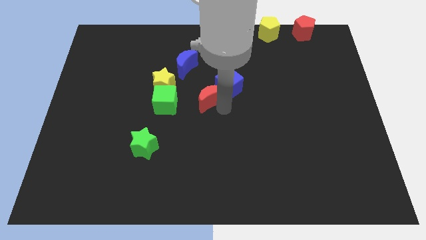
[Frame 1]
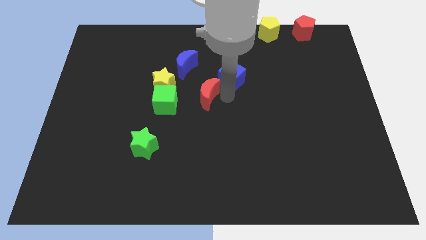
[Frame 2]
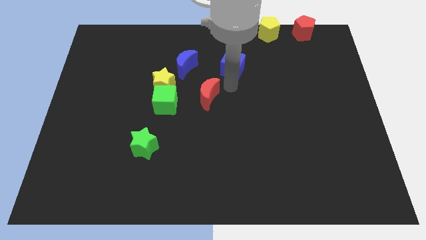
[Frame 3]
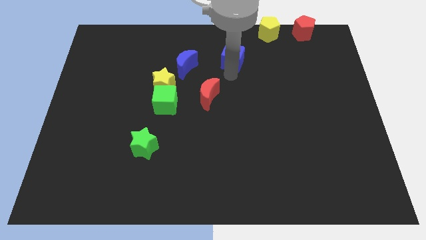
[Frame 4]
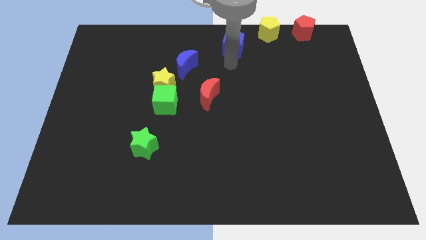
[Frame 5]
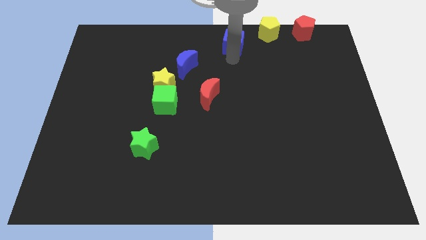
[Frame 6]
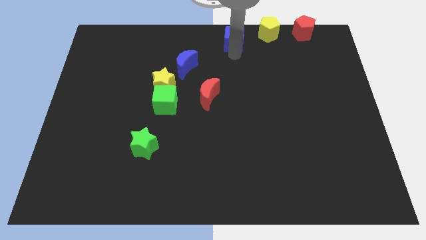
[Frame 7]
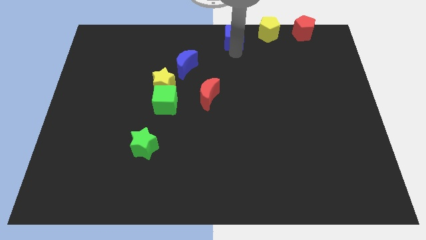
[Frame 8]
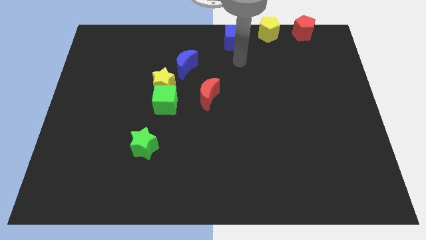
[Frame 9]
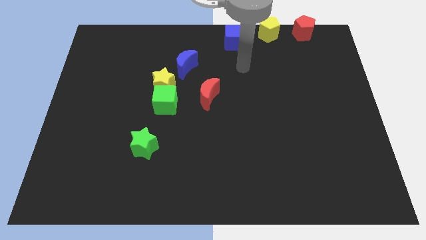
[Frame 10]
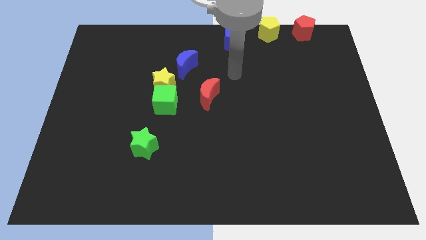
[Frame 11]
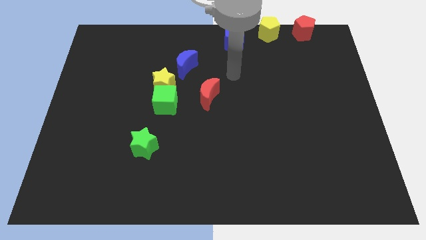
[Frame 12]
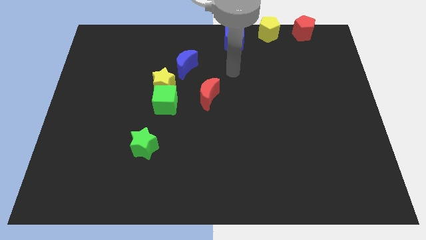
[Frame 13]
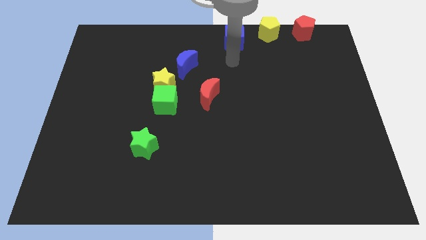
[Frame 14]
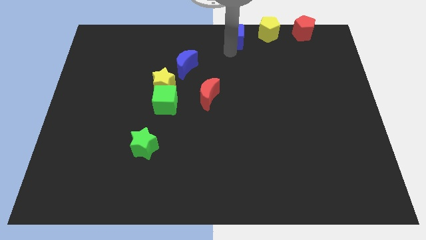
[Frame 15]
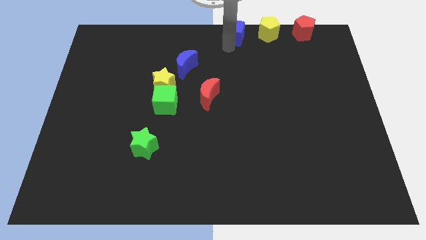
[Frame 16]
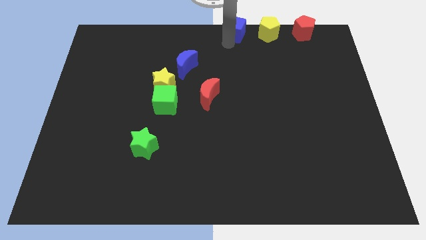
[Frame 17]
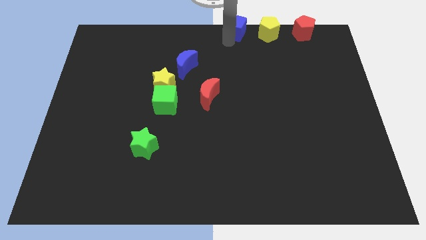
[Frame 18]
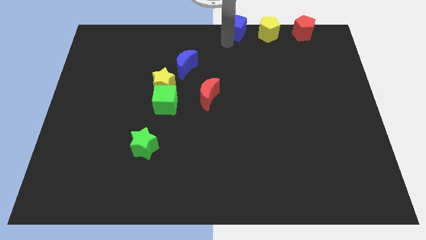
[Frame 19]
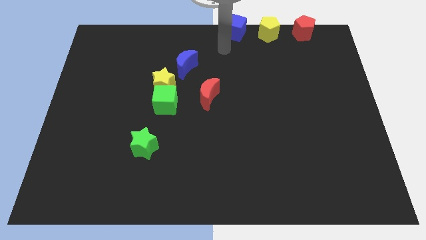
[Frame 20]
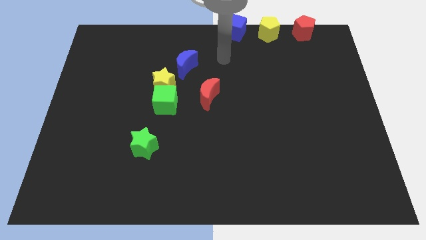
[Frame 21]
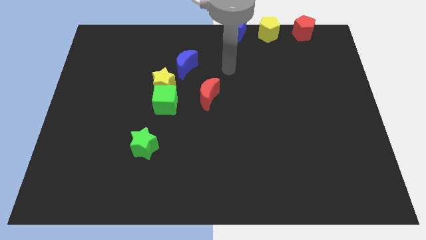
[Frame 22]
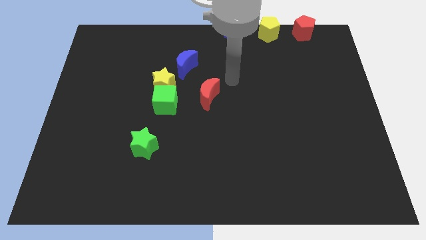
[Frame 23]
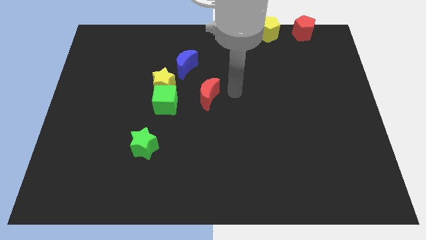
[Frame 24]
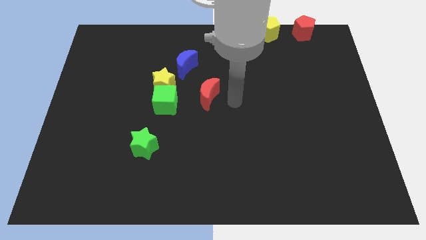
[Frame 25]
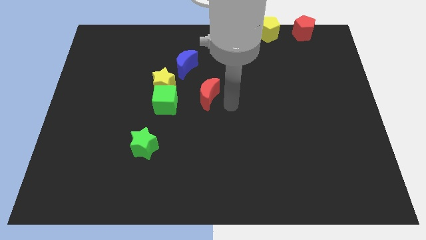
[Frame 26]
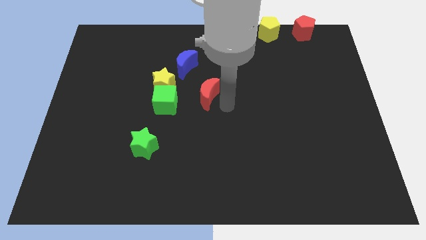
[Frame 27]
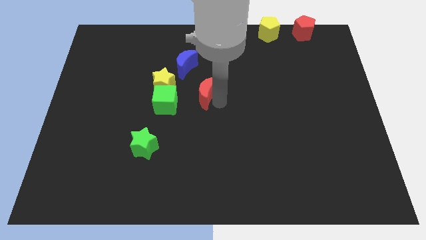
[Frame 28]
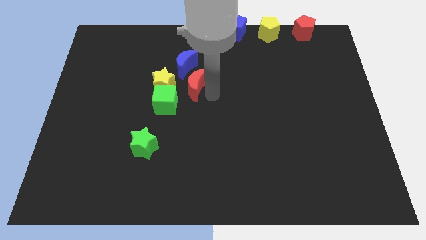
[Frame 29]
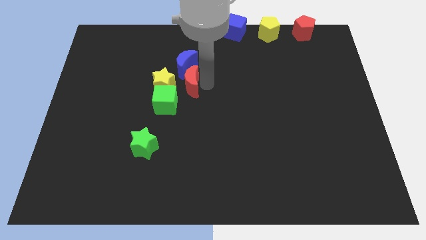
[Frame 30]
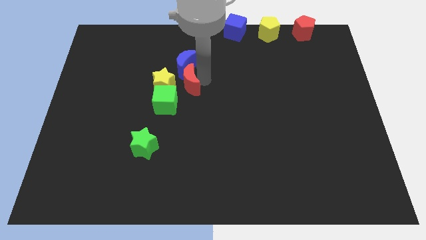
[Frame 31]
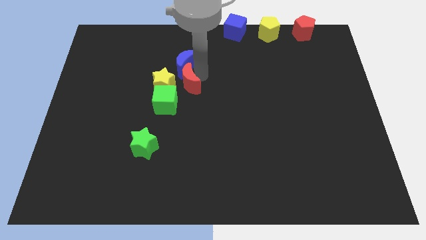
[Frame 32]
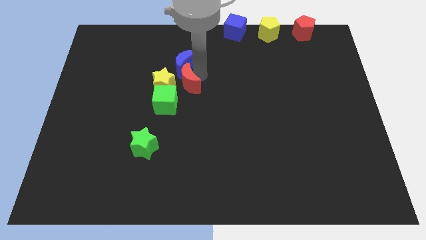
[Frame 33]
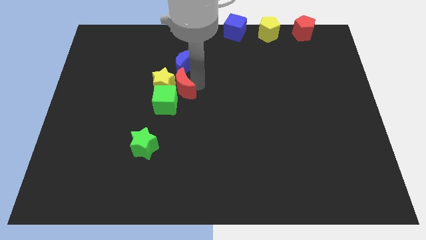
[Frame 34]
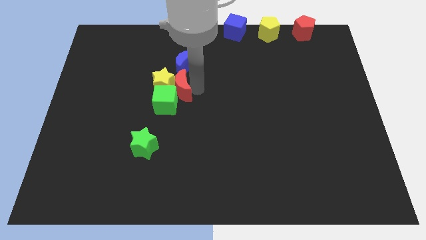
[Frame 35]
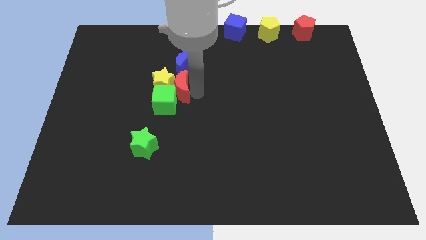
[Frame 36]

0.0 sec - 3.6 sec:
push red crescent beside yellow star

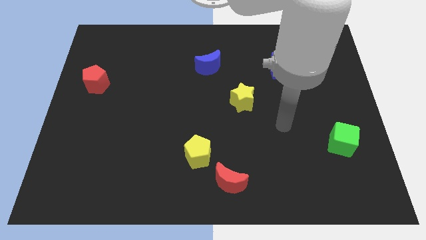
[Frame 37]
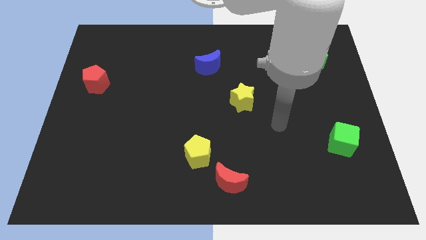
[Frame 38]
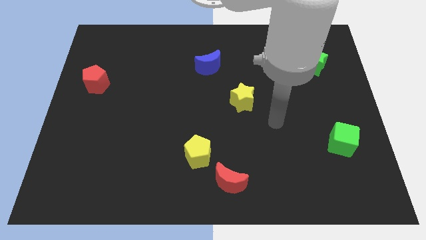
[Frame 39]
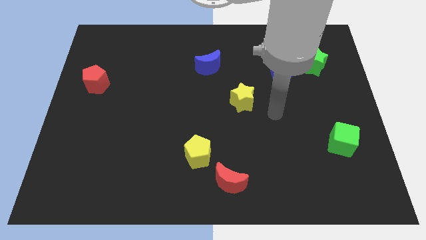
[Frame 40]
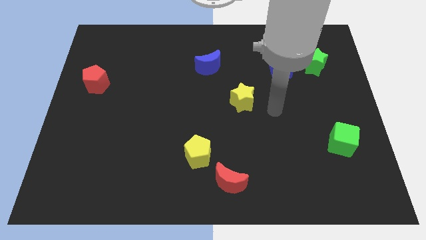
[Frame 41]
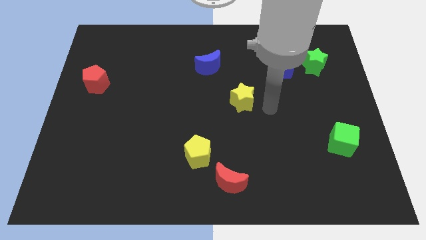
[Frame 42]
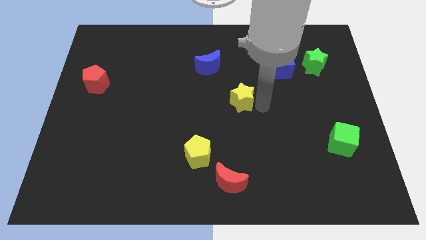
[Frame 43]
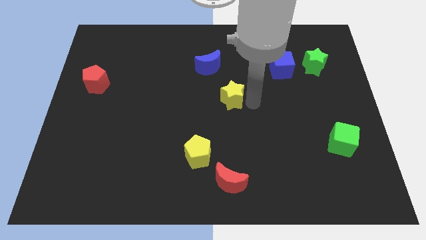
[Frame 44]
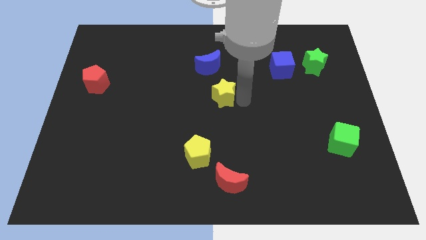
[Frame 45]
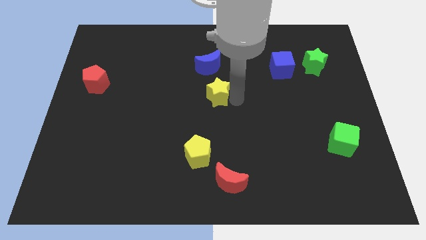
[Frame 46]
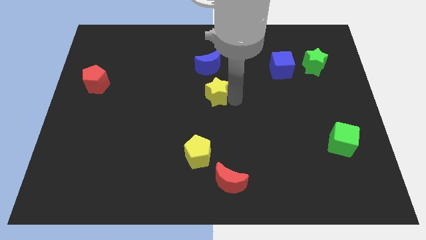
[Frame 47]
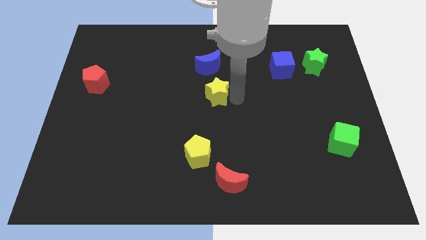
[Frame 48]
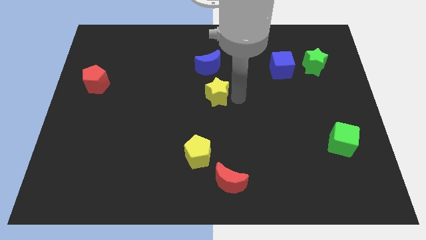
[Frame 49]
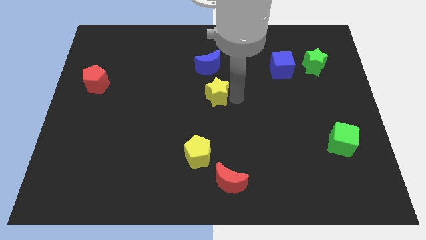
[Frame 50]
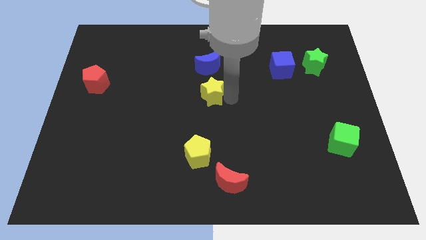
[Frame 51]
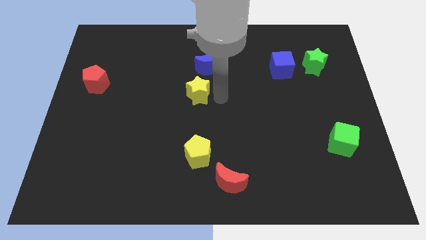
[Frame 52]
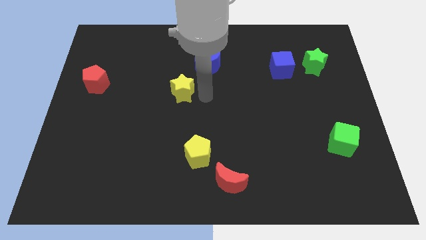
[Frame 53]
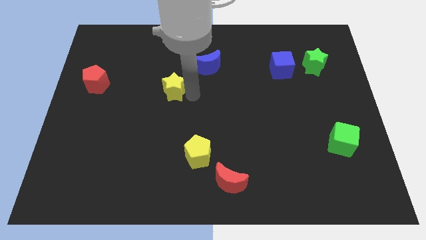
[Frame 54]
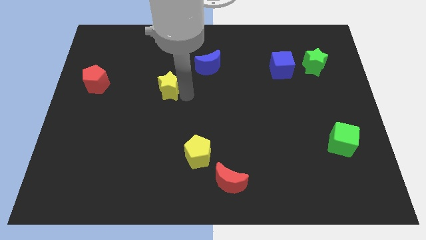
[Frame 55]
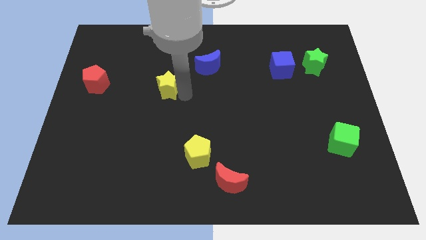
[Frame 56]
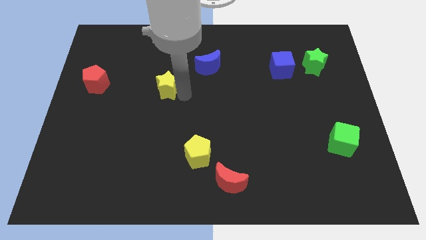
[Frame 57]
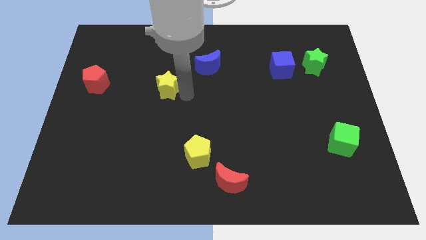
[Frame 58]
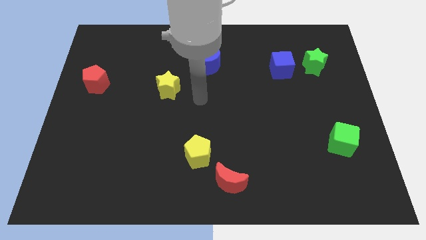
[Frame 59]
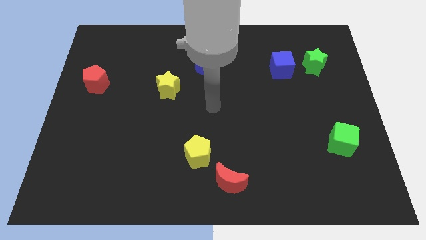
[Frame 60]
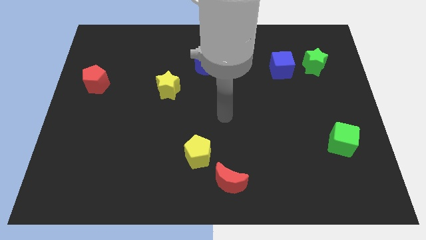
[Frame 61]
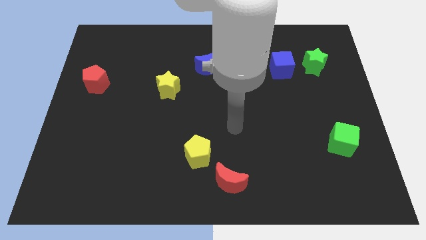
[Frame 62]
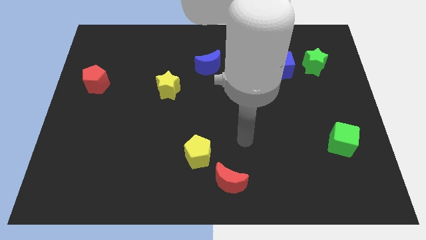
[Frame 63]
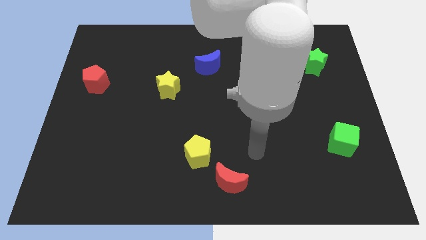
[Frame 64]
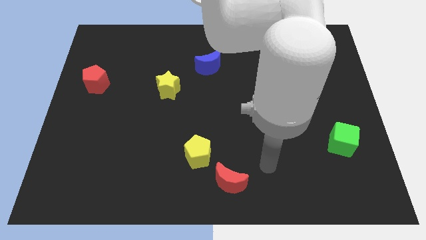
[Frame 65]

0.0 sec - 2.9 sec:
move yellow star towards red pentagon

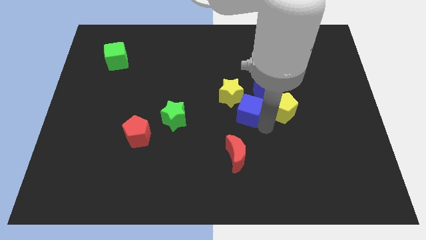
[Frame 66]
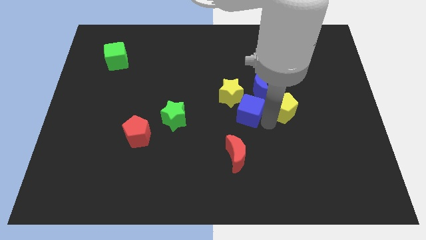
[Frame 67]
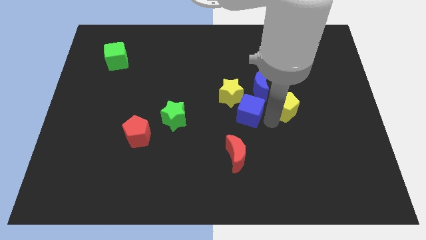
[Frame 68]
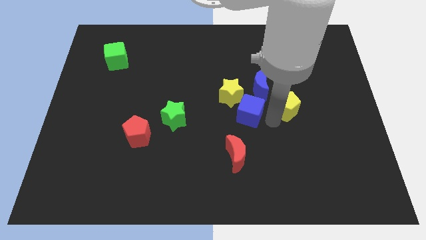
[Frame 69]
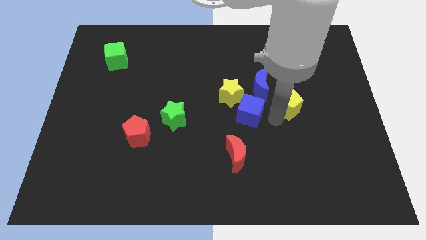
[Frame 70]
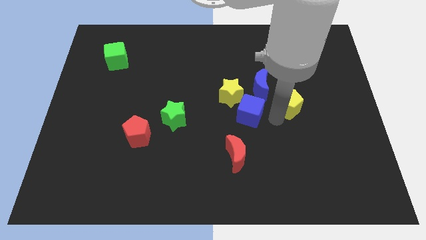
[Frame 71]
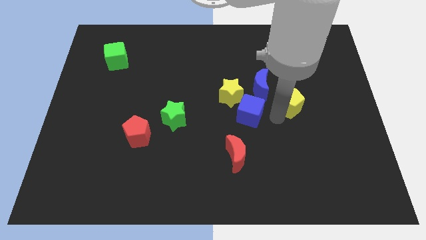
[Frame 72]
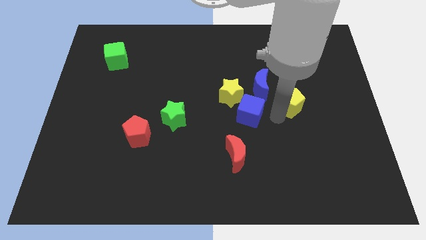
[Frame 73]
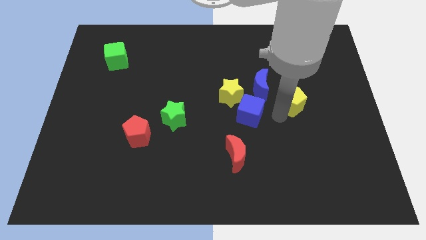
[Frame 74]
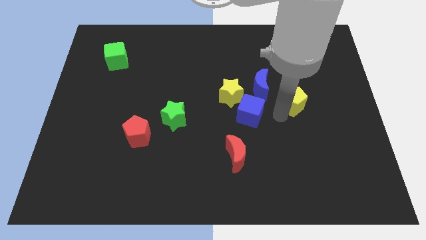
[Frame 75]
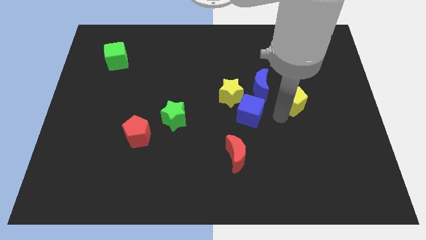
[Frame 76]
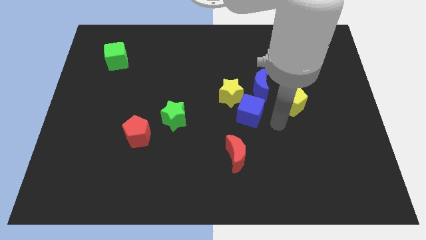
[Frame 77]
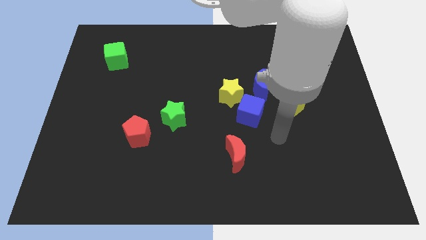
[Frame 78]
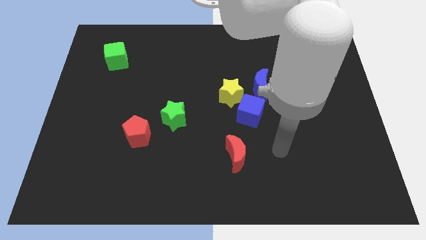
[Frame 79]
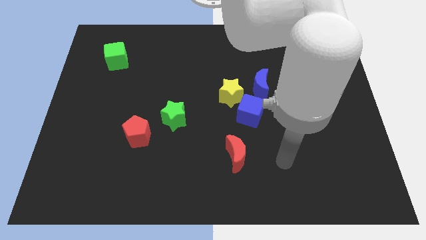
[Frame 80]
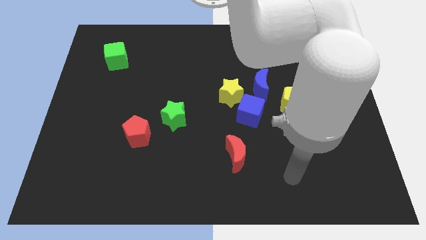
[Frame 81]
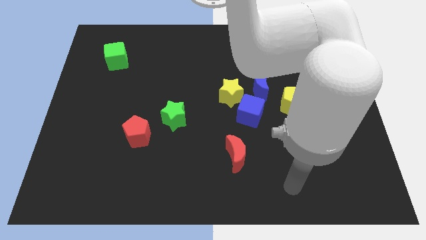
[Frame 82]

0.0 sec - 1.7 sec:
place the yellow pentagon to the right of the blue crescent

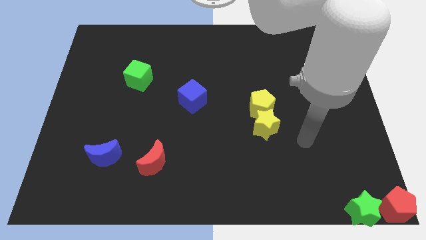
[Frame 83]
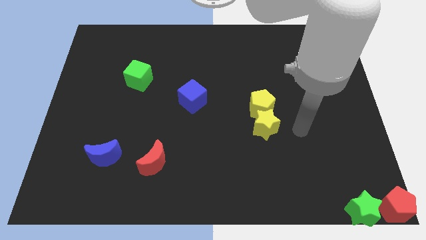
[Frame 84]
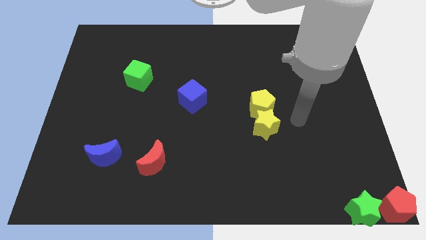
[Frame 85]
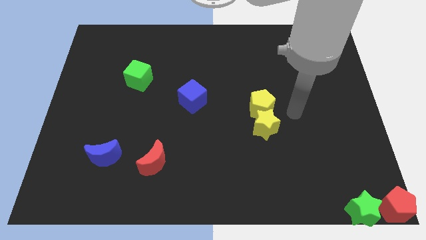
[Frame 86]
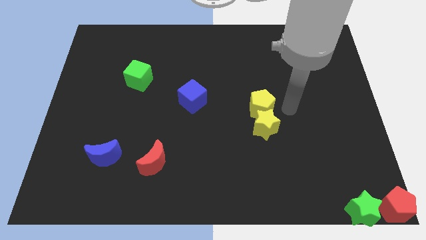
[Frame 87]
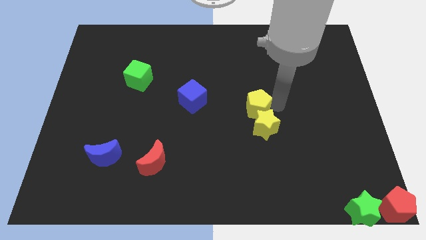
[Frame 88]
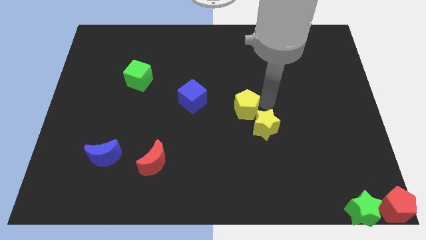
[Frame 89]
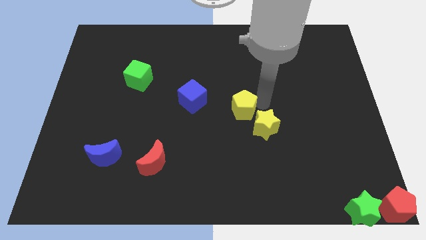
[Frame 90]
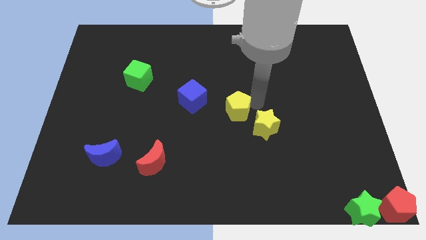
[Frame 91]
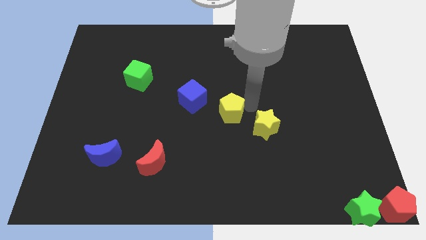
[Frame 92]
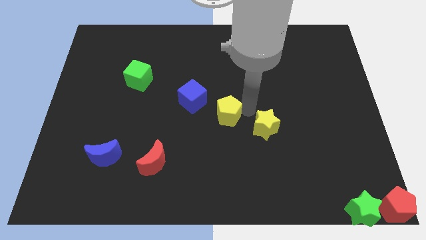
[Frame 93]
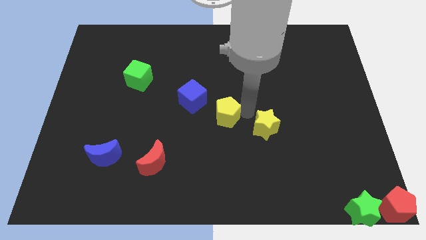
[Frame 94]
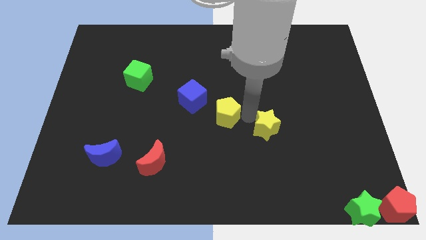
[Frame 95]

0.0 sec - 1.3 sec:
separate the yellow pentagon away from the yellow star
